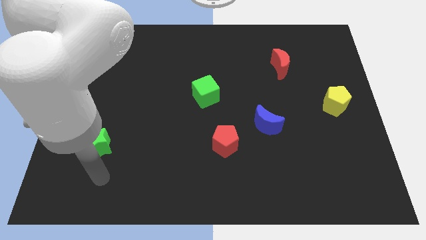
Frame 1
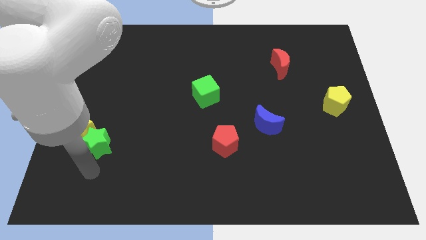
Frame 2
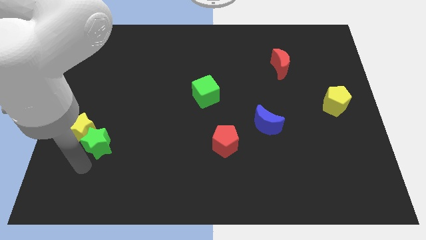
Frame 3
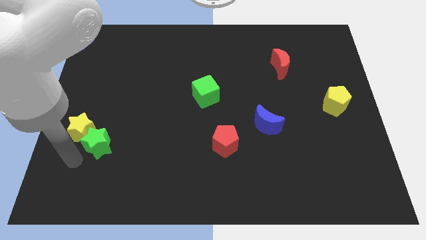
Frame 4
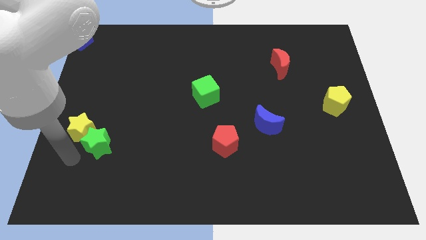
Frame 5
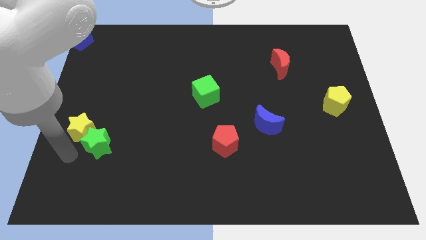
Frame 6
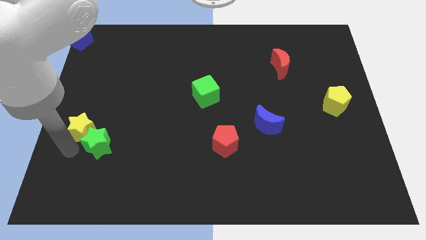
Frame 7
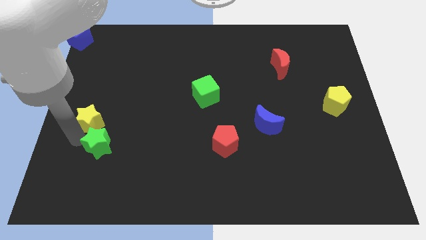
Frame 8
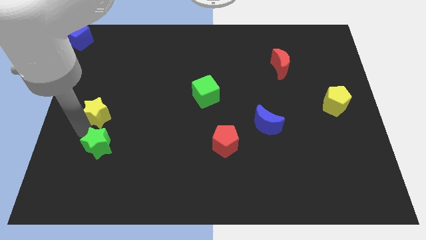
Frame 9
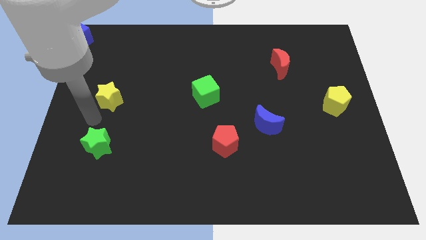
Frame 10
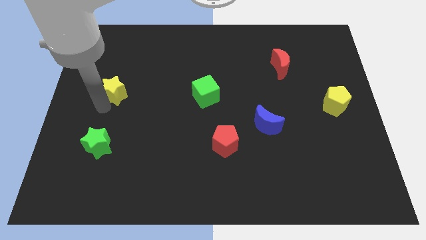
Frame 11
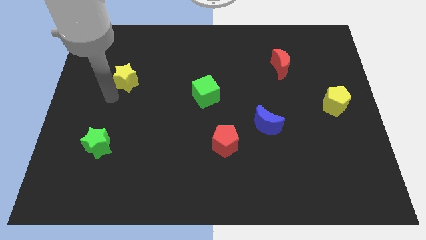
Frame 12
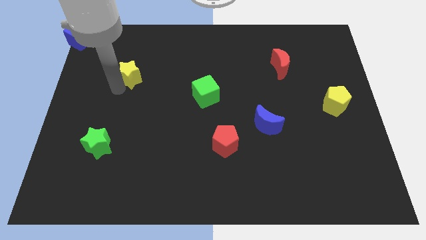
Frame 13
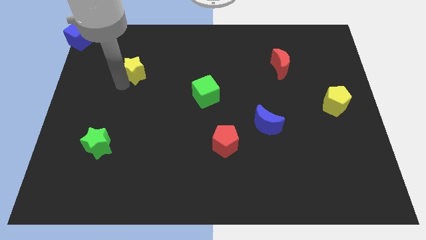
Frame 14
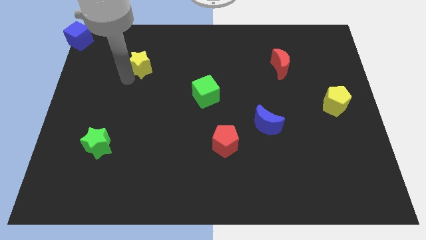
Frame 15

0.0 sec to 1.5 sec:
move the yellow star to the bottom right of the blue cube

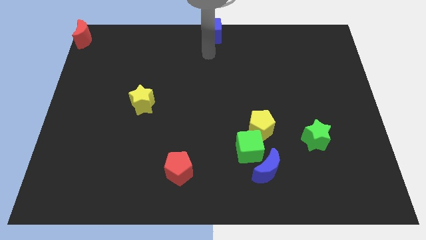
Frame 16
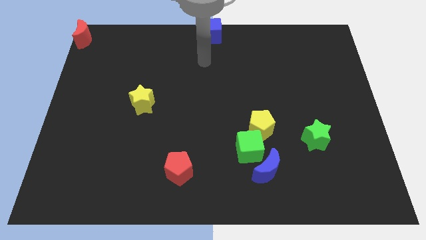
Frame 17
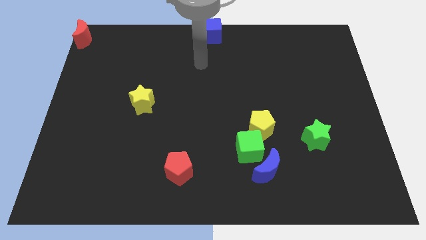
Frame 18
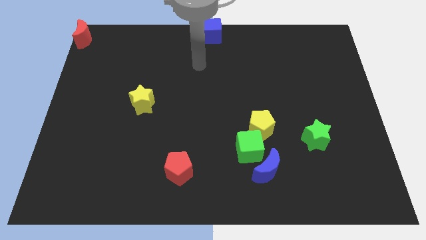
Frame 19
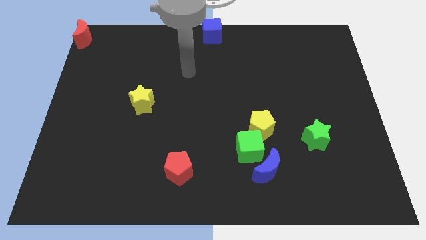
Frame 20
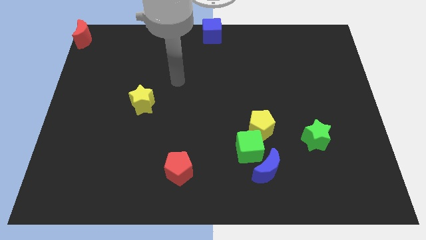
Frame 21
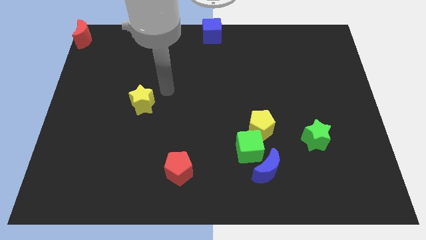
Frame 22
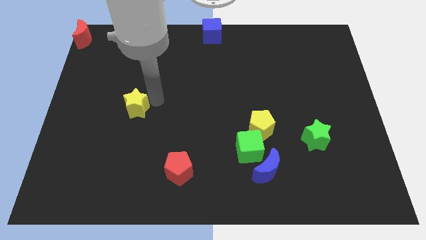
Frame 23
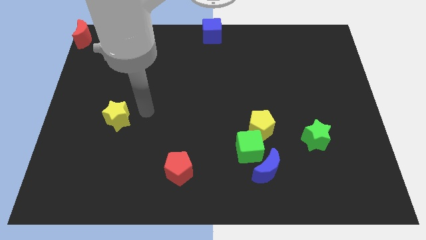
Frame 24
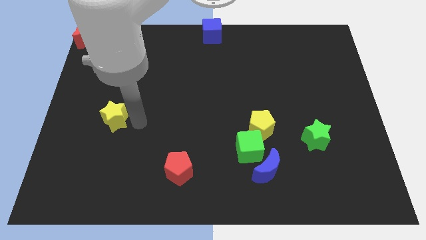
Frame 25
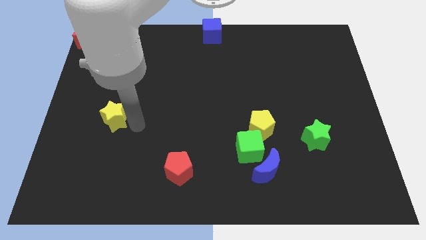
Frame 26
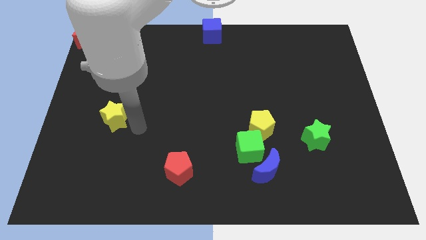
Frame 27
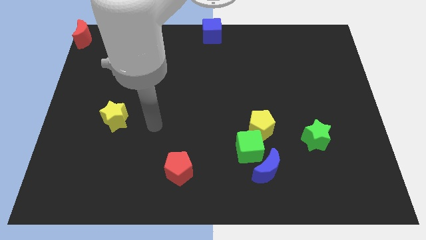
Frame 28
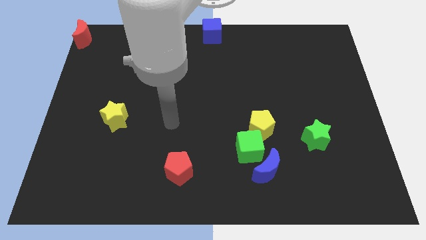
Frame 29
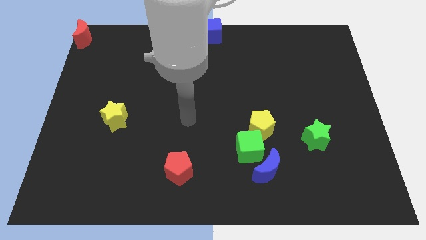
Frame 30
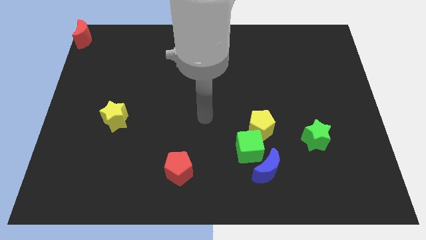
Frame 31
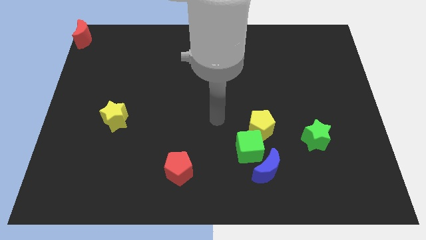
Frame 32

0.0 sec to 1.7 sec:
slightly push the yellow star between red blocks

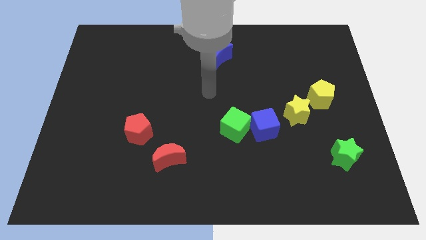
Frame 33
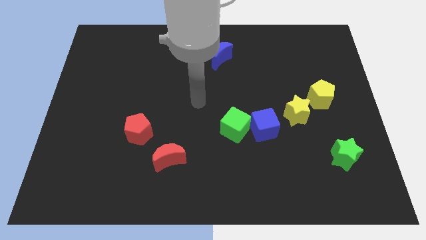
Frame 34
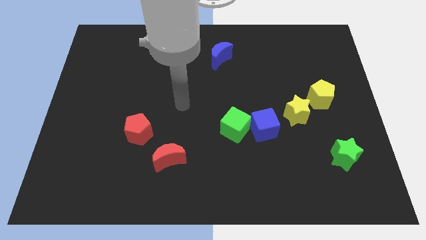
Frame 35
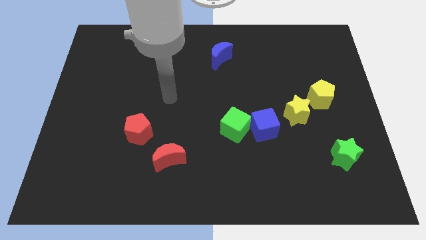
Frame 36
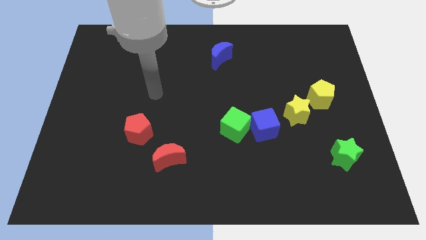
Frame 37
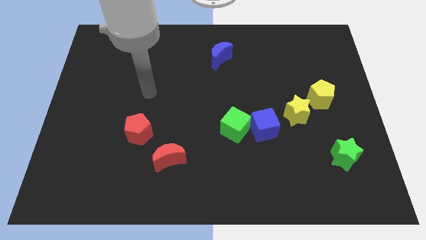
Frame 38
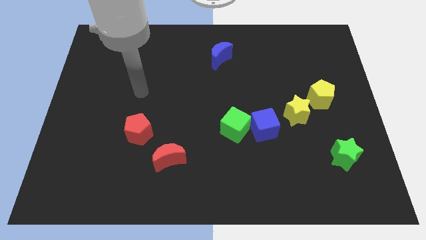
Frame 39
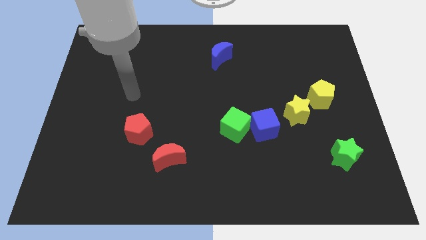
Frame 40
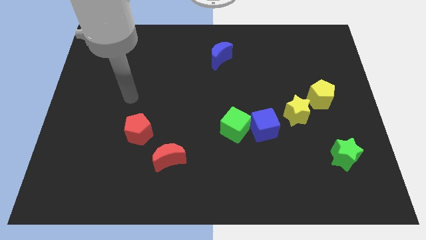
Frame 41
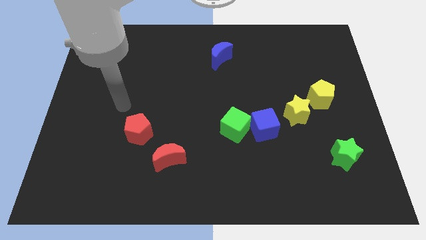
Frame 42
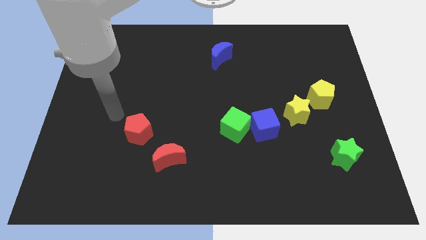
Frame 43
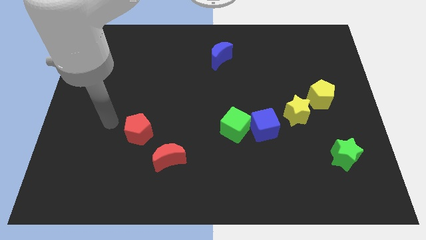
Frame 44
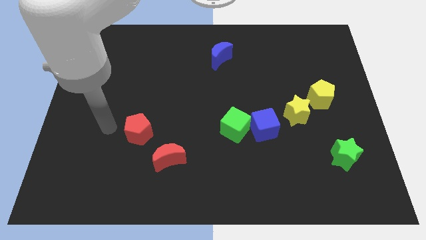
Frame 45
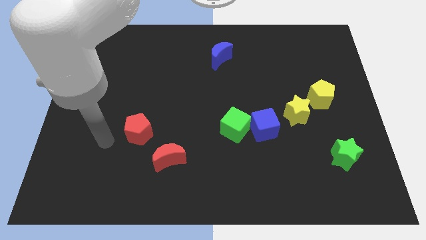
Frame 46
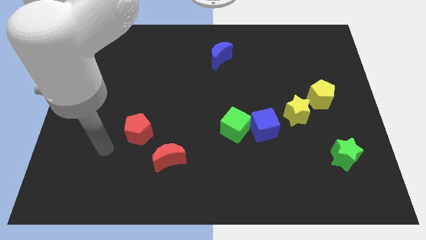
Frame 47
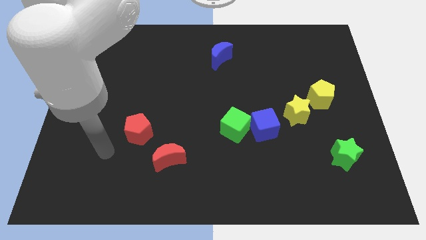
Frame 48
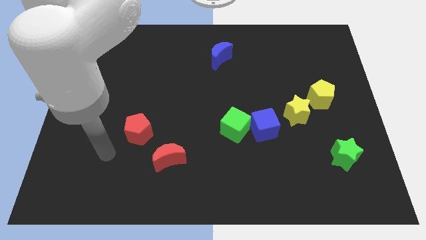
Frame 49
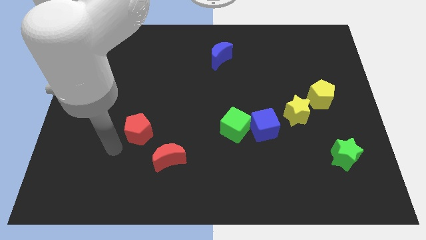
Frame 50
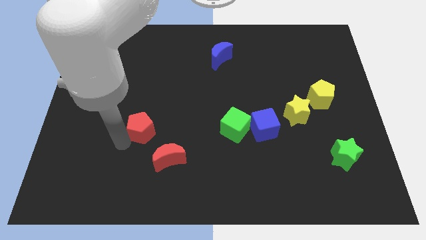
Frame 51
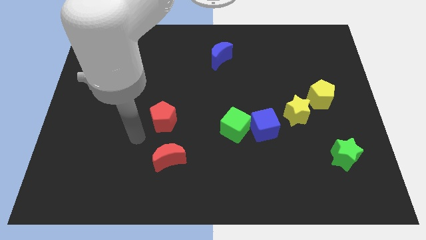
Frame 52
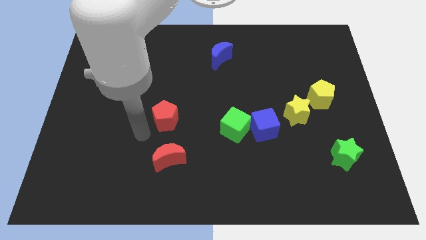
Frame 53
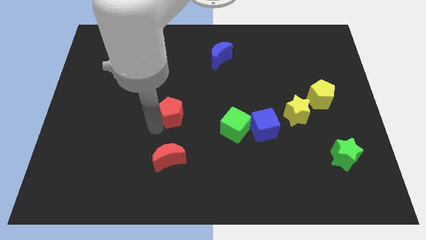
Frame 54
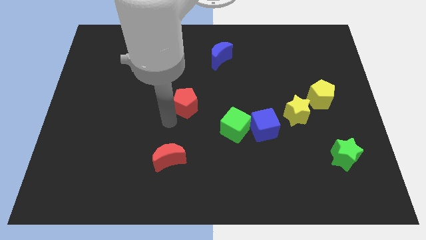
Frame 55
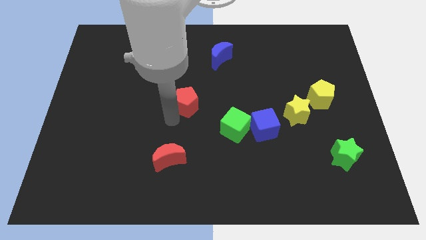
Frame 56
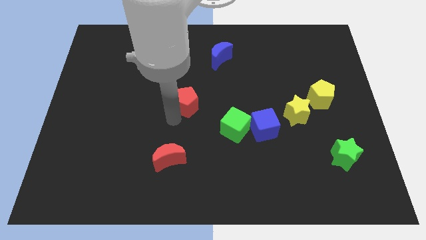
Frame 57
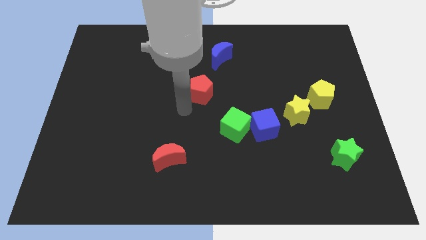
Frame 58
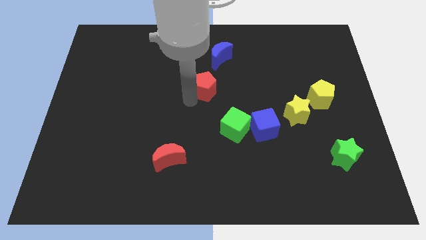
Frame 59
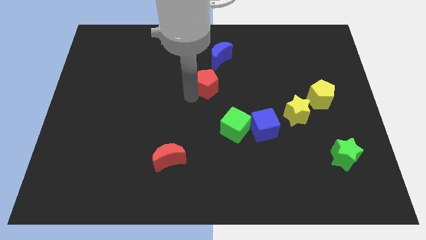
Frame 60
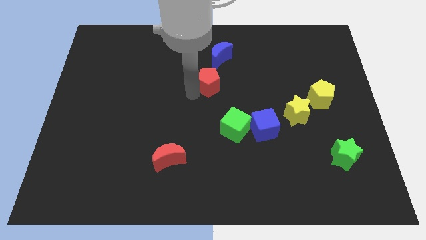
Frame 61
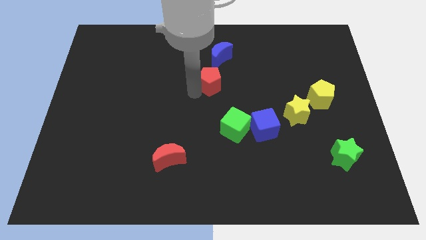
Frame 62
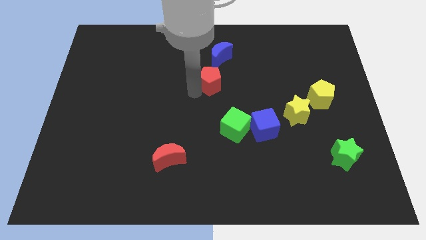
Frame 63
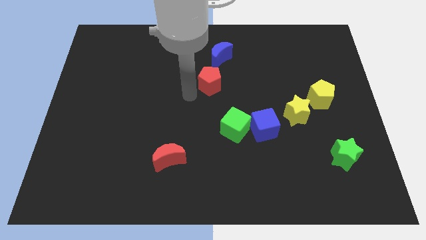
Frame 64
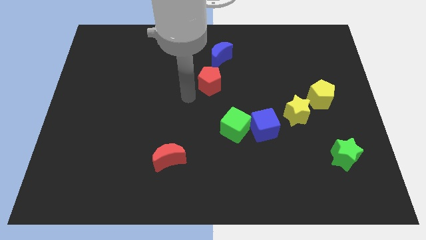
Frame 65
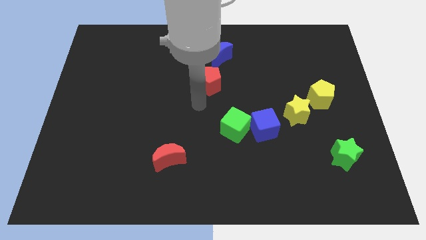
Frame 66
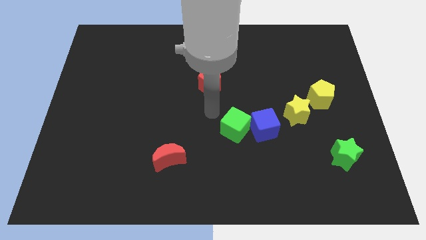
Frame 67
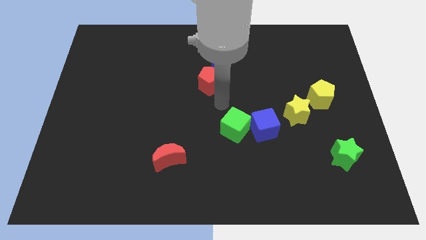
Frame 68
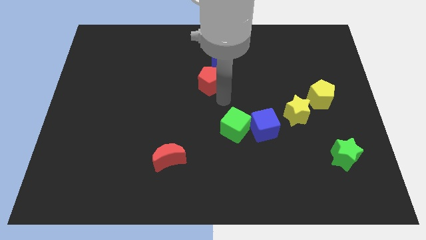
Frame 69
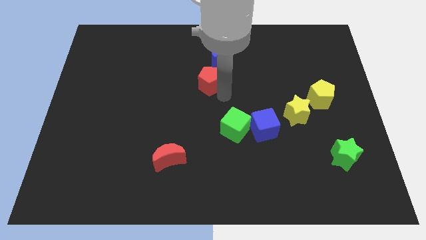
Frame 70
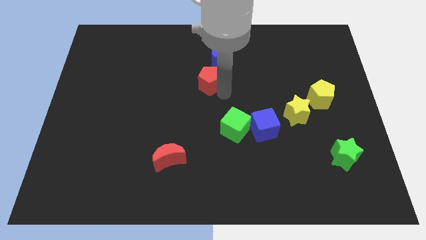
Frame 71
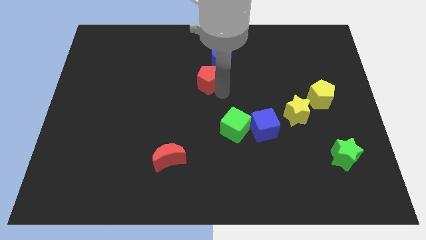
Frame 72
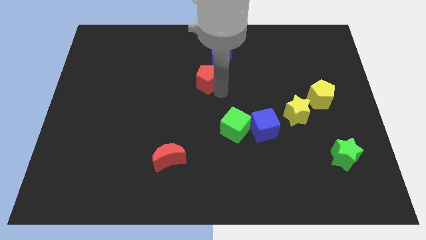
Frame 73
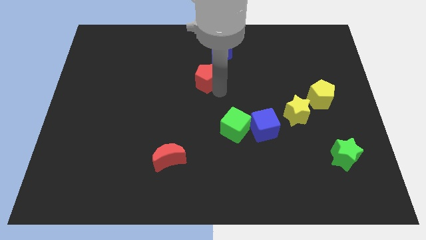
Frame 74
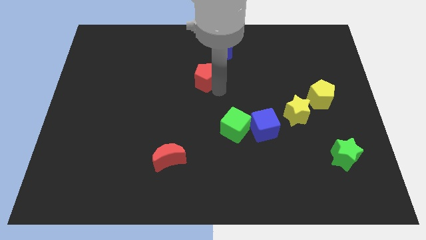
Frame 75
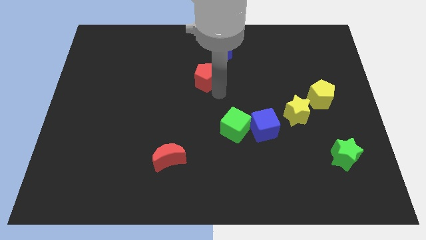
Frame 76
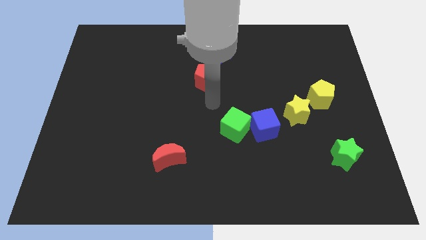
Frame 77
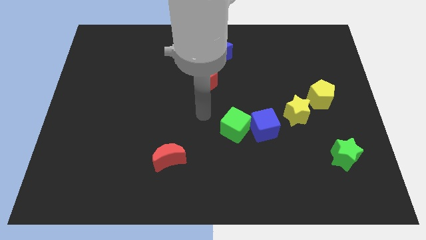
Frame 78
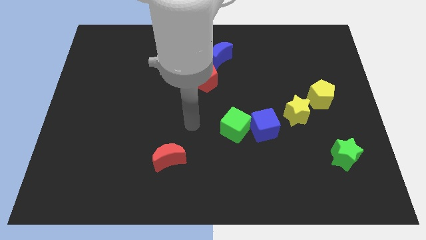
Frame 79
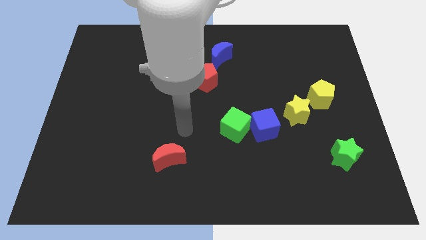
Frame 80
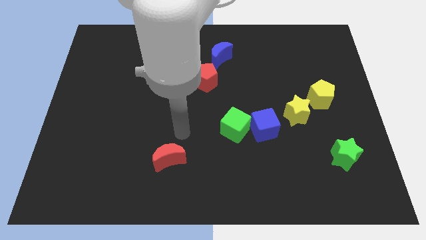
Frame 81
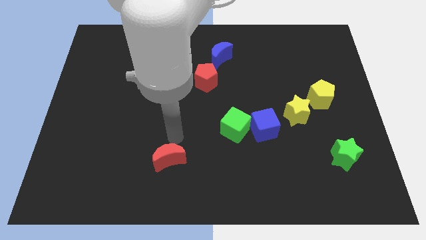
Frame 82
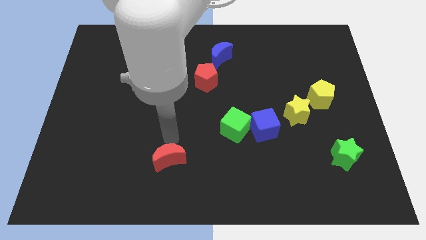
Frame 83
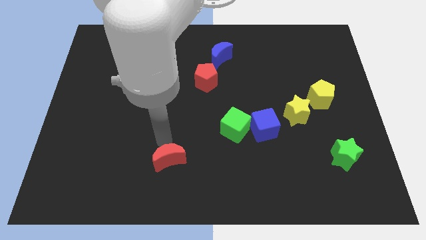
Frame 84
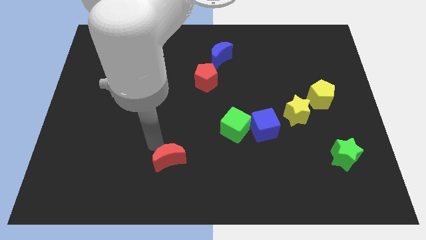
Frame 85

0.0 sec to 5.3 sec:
put the red pentagon down to the blue moon

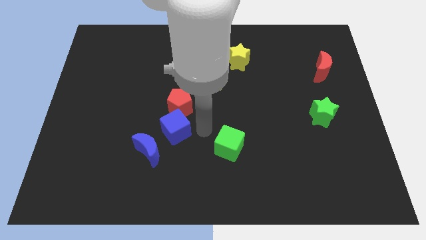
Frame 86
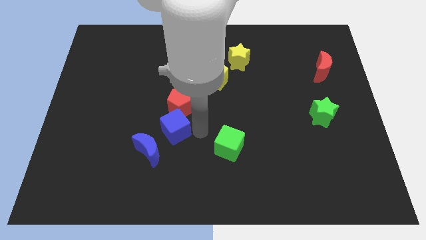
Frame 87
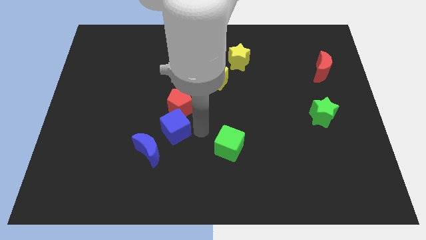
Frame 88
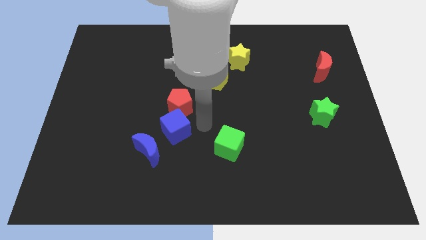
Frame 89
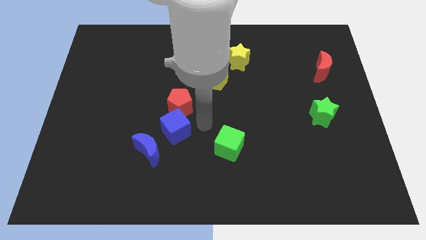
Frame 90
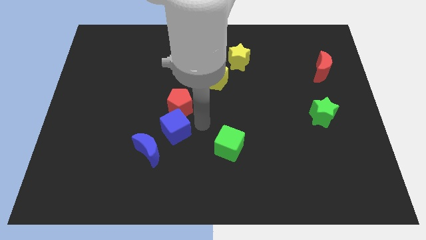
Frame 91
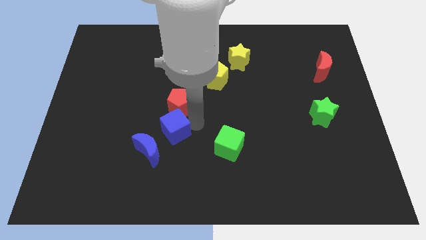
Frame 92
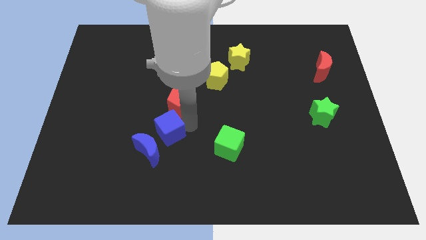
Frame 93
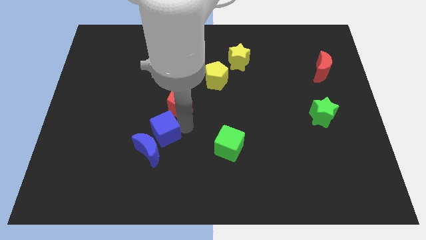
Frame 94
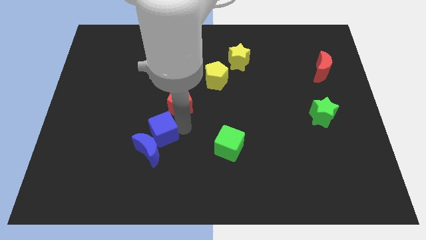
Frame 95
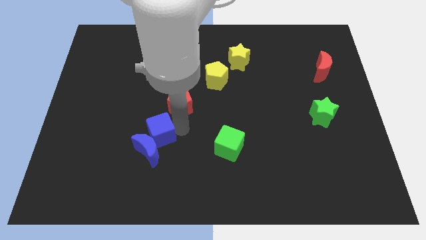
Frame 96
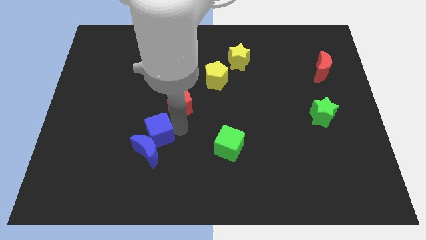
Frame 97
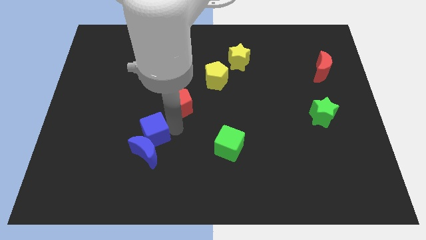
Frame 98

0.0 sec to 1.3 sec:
place blue cube to the top of the blue moon
